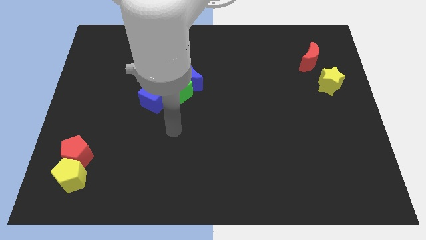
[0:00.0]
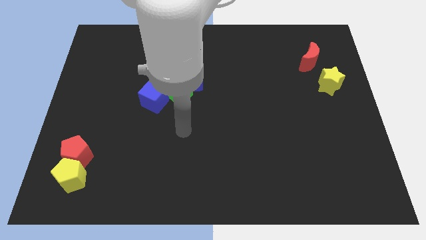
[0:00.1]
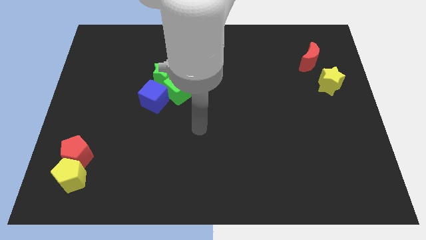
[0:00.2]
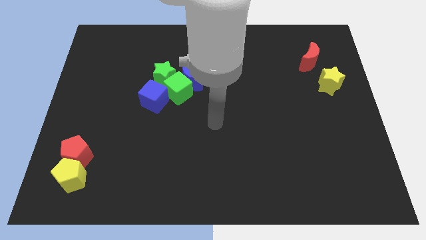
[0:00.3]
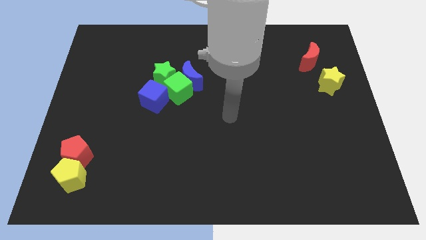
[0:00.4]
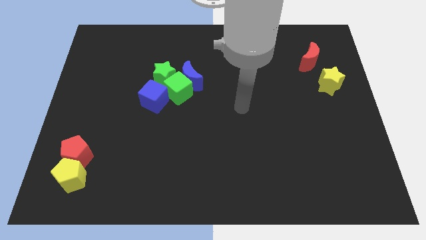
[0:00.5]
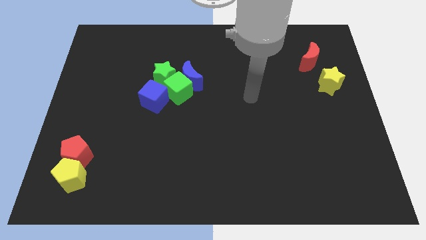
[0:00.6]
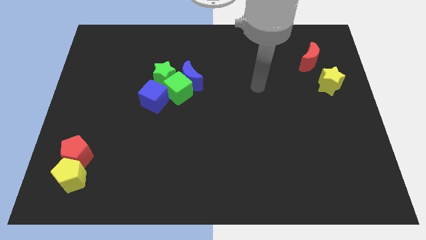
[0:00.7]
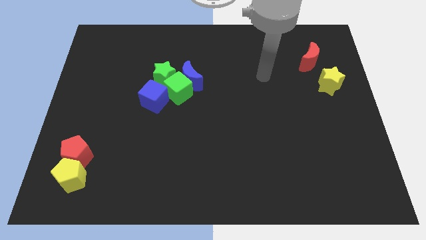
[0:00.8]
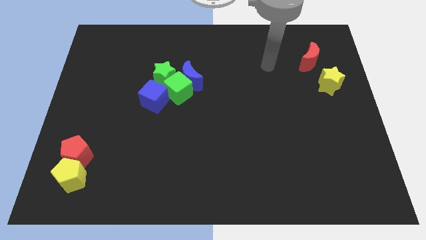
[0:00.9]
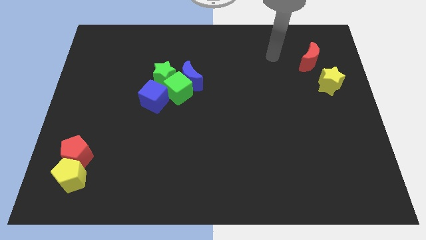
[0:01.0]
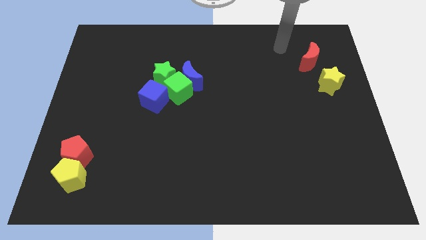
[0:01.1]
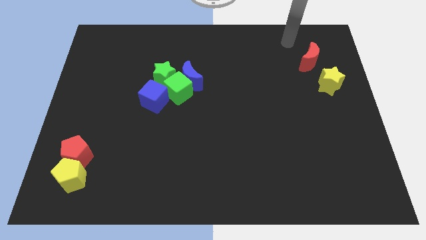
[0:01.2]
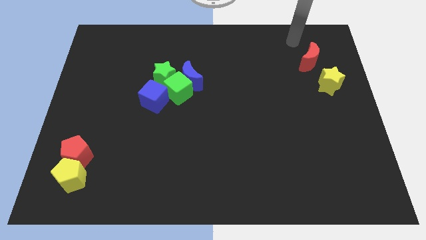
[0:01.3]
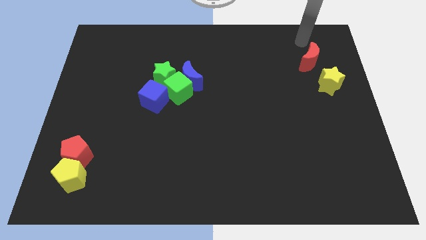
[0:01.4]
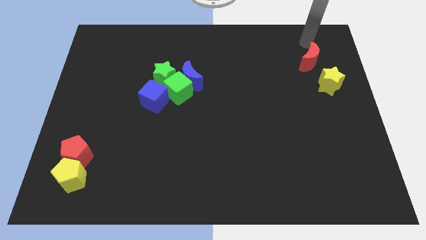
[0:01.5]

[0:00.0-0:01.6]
place your arm above the red moon

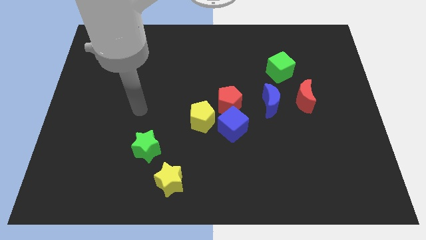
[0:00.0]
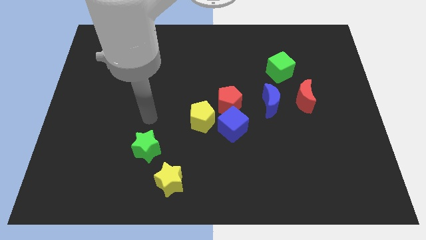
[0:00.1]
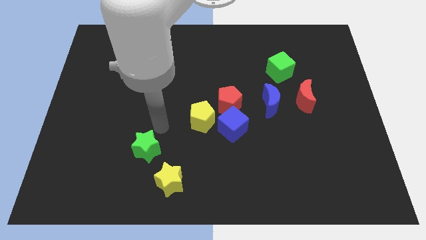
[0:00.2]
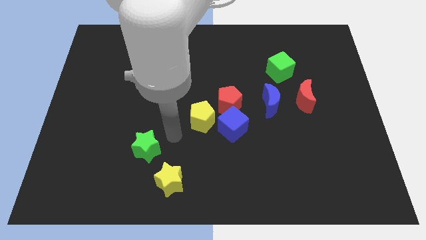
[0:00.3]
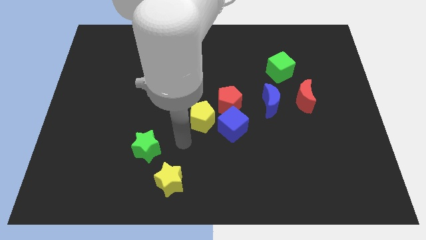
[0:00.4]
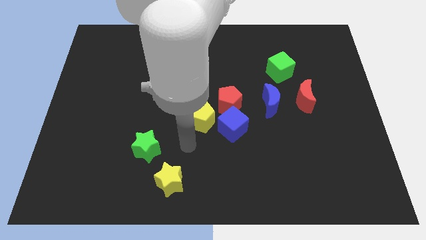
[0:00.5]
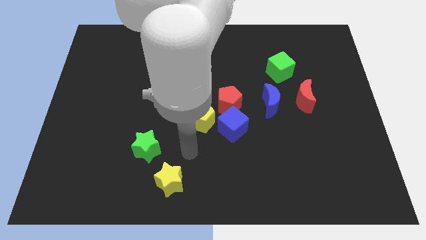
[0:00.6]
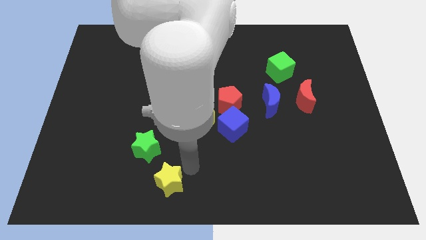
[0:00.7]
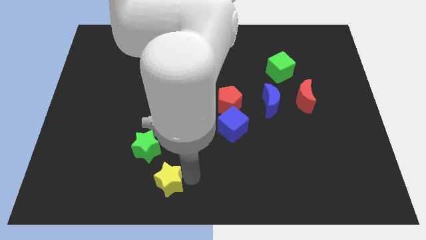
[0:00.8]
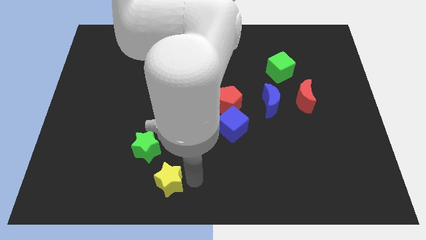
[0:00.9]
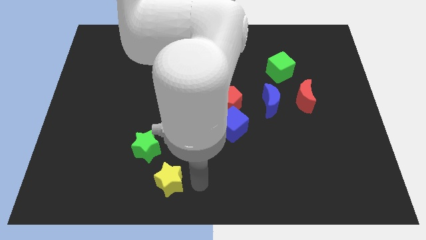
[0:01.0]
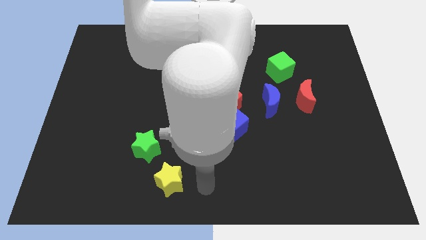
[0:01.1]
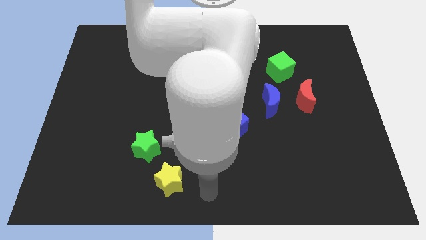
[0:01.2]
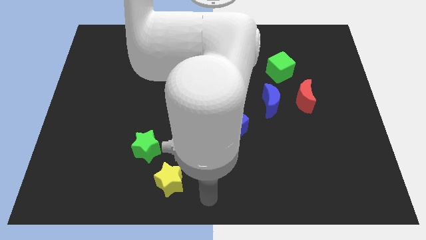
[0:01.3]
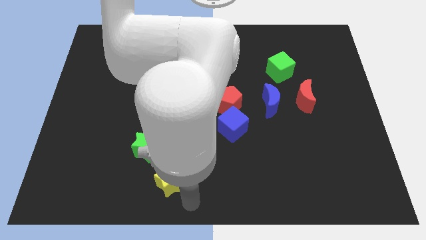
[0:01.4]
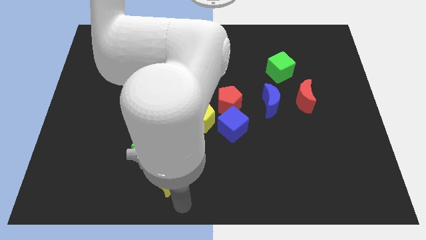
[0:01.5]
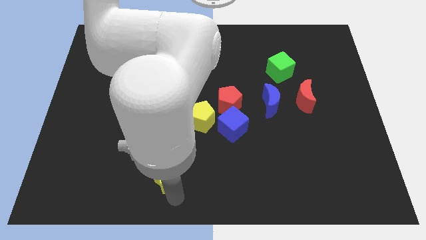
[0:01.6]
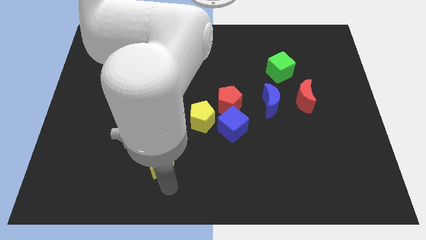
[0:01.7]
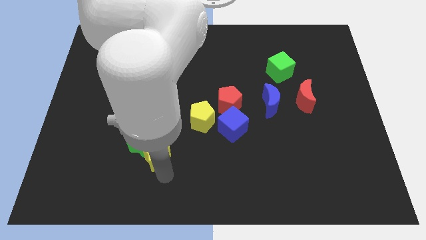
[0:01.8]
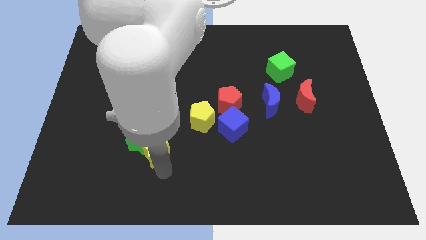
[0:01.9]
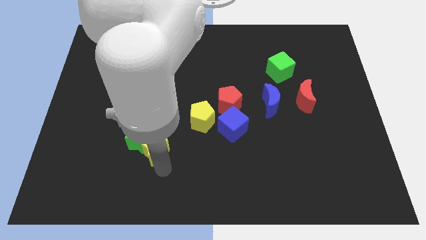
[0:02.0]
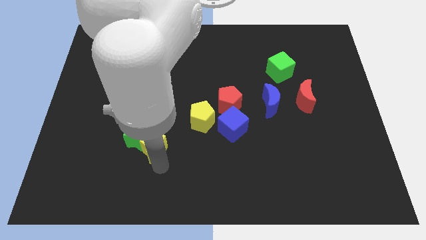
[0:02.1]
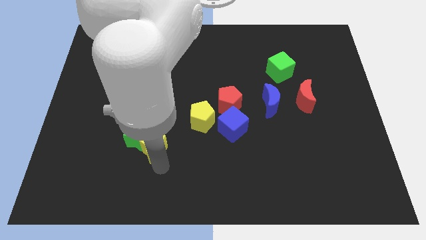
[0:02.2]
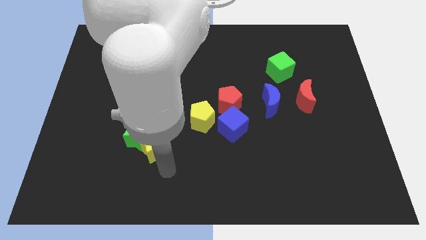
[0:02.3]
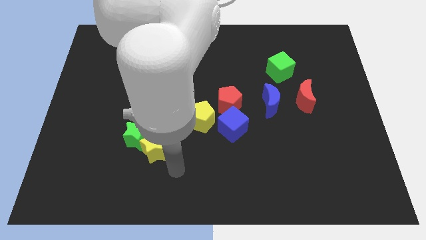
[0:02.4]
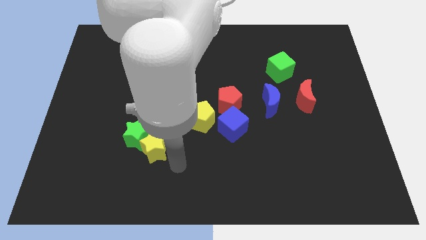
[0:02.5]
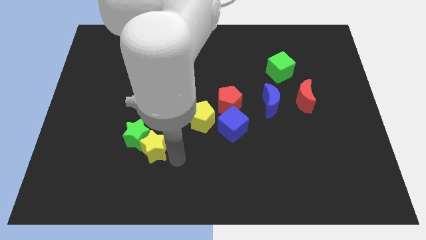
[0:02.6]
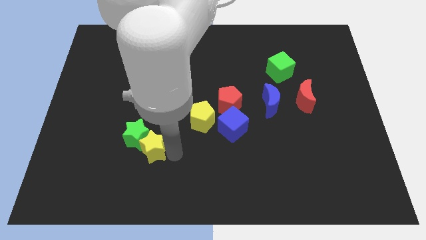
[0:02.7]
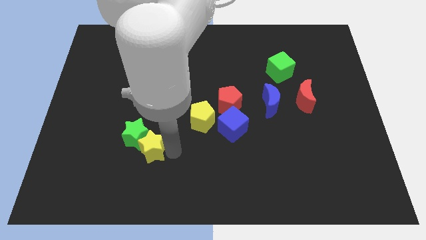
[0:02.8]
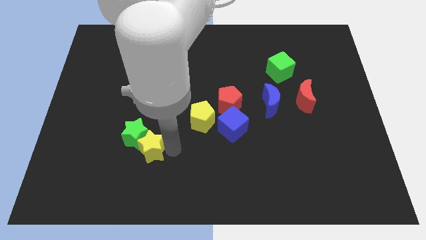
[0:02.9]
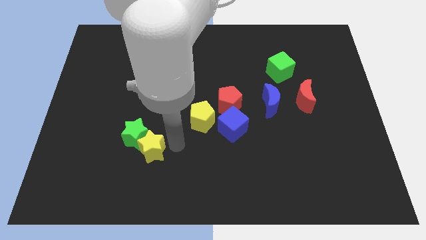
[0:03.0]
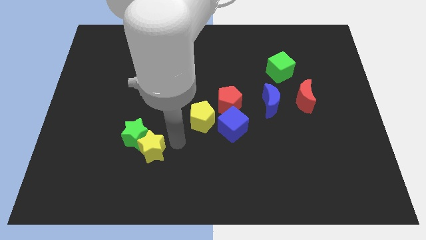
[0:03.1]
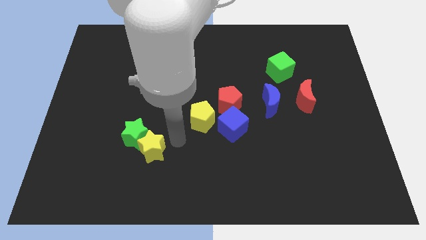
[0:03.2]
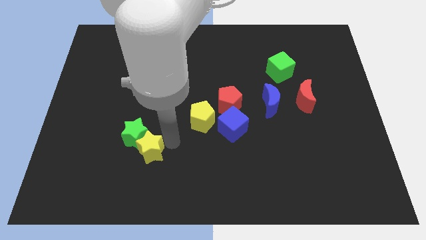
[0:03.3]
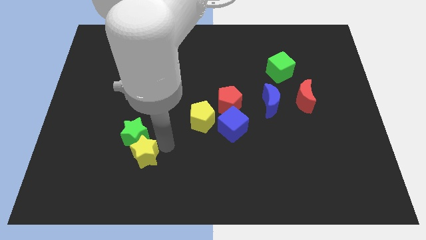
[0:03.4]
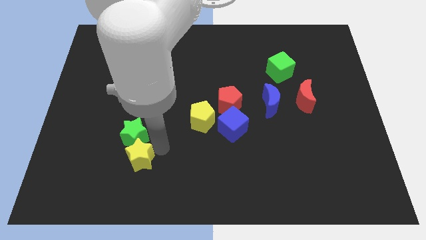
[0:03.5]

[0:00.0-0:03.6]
push the yellow star in to green star

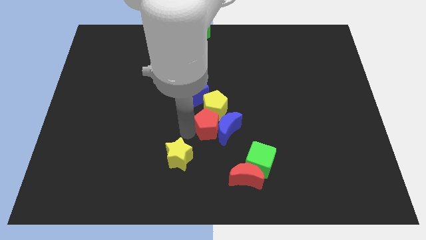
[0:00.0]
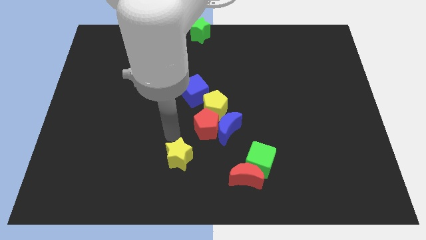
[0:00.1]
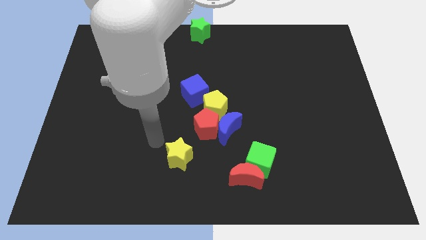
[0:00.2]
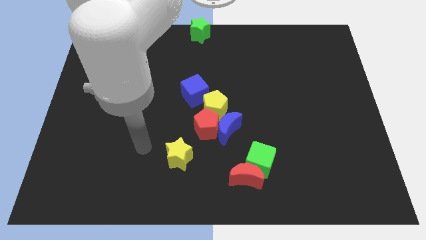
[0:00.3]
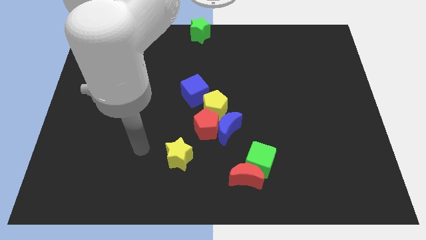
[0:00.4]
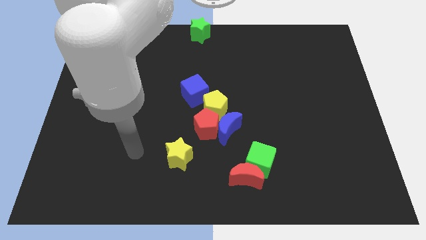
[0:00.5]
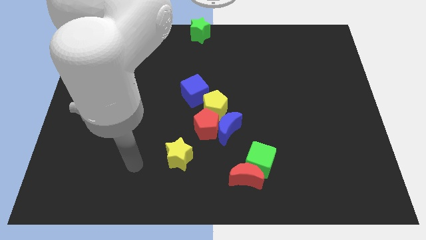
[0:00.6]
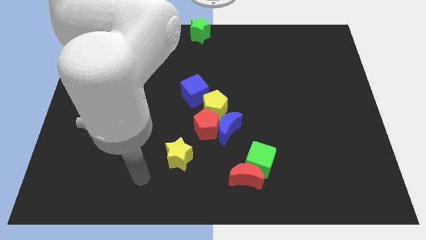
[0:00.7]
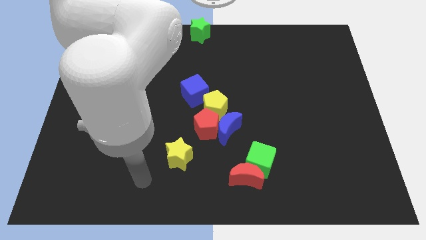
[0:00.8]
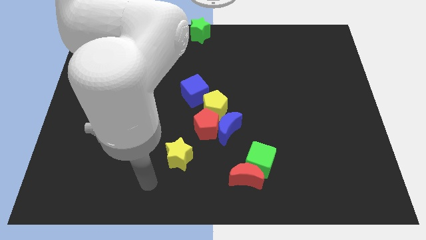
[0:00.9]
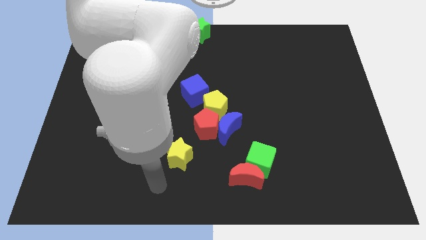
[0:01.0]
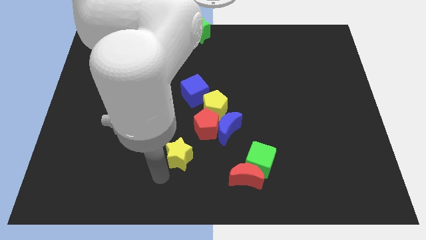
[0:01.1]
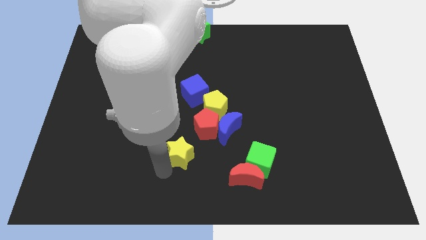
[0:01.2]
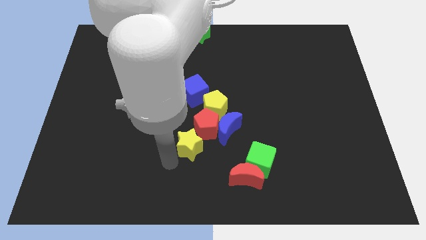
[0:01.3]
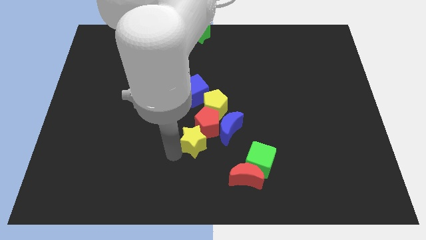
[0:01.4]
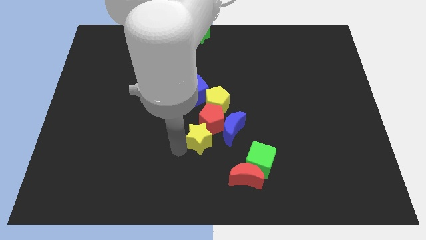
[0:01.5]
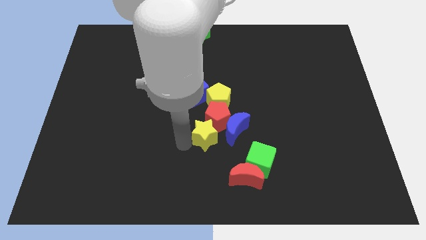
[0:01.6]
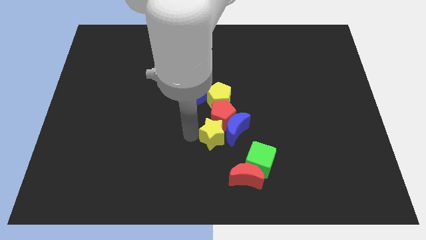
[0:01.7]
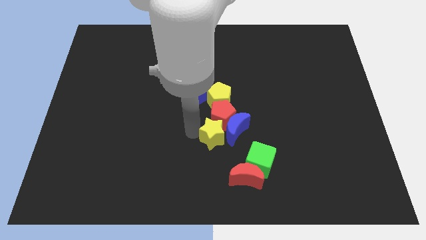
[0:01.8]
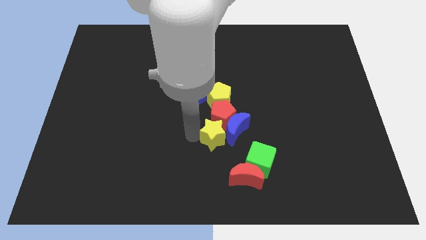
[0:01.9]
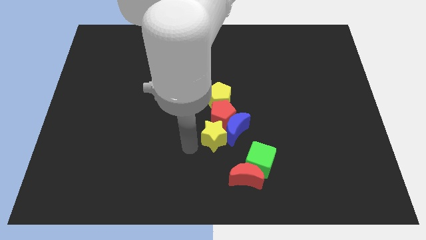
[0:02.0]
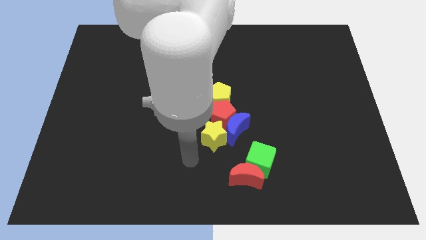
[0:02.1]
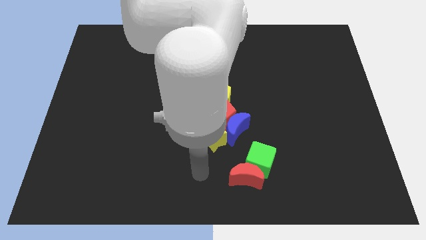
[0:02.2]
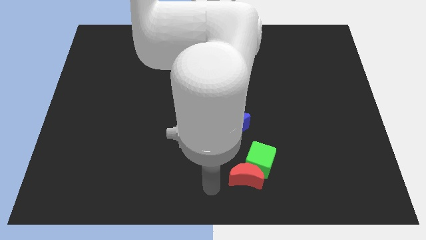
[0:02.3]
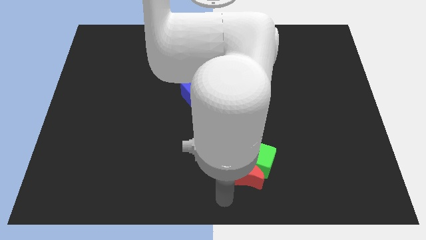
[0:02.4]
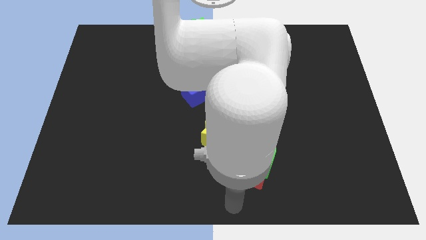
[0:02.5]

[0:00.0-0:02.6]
push the yellow star into the group of blocks

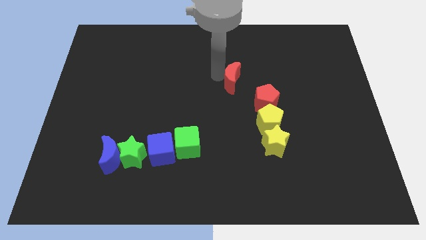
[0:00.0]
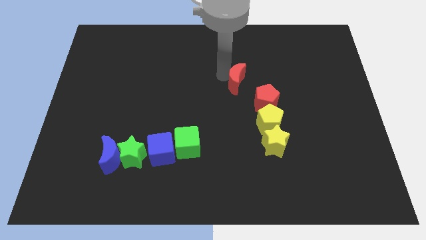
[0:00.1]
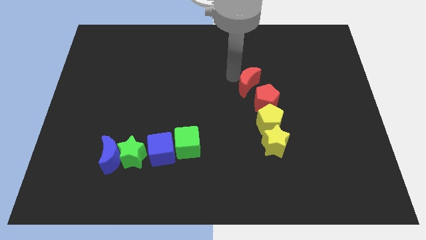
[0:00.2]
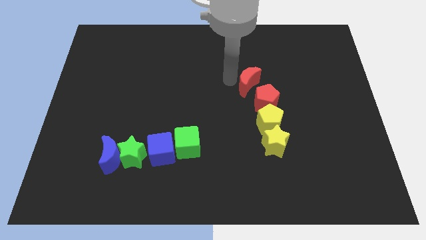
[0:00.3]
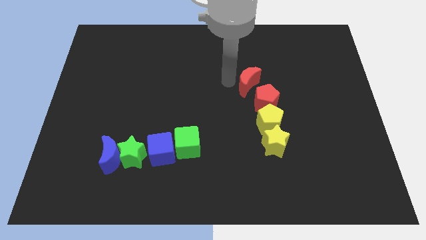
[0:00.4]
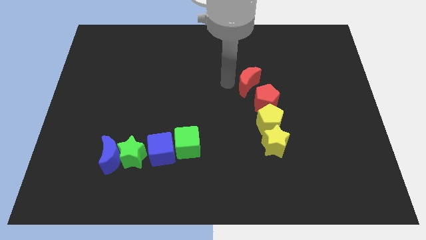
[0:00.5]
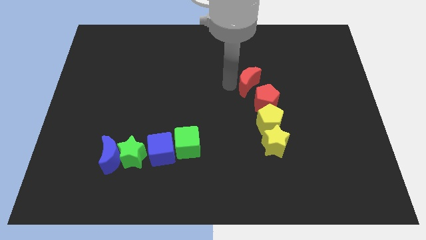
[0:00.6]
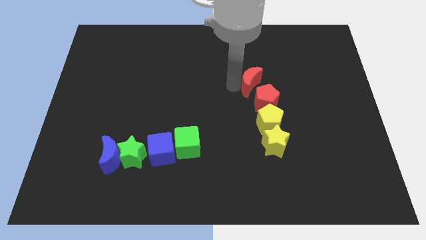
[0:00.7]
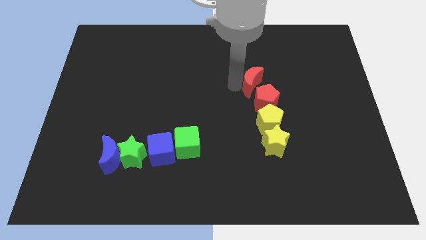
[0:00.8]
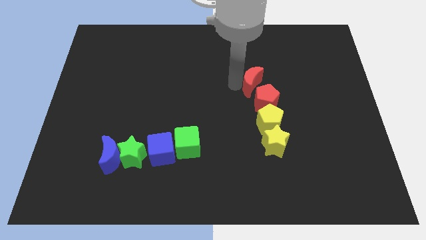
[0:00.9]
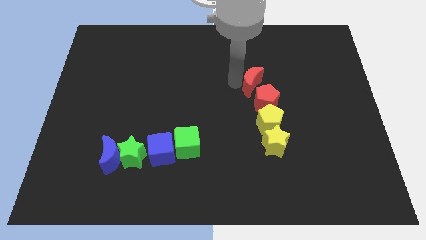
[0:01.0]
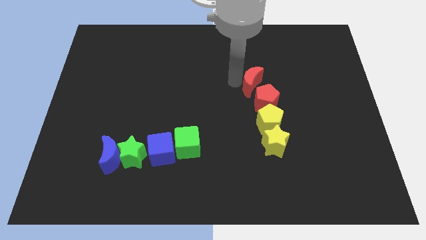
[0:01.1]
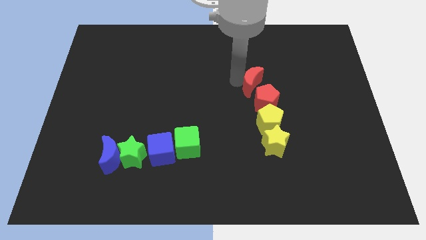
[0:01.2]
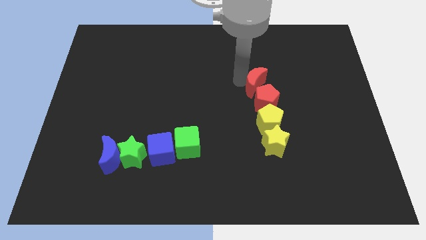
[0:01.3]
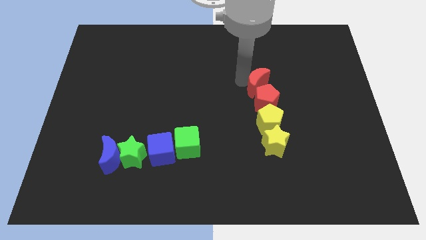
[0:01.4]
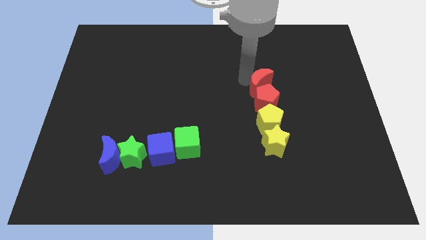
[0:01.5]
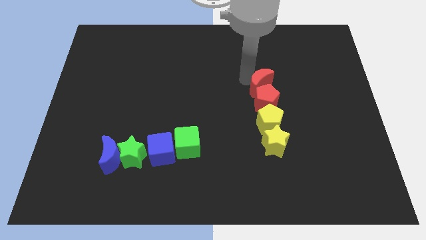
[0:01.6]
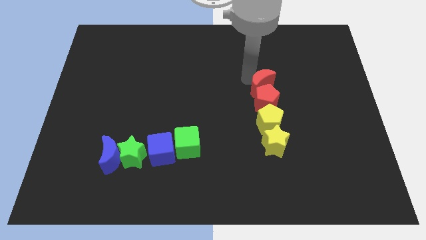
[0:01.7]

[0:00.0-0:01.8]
push the red crescent to the top of the red pentagon
